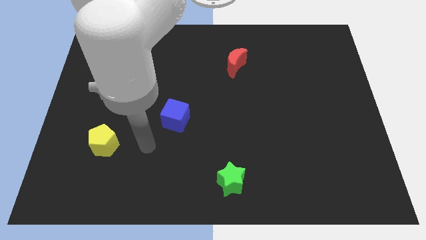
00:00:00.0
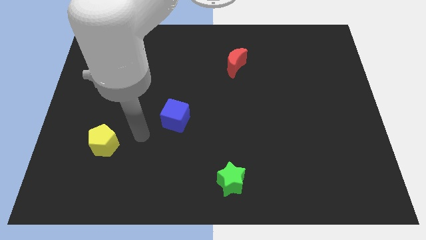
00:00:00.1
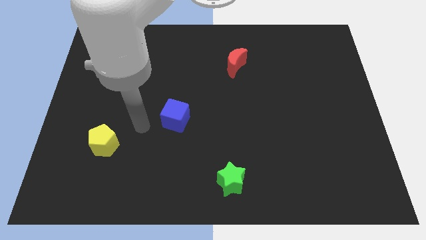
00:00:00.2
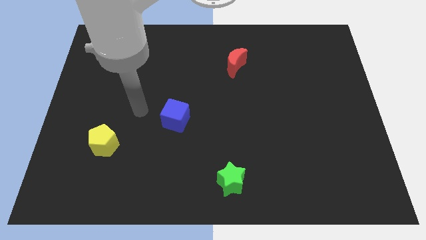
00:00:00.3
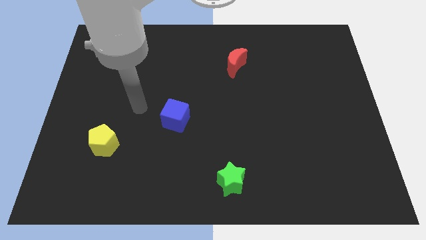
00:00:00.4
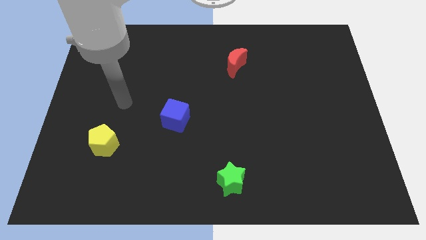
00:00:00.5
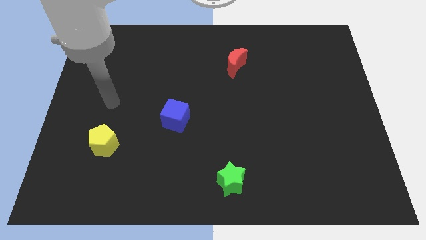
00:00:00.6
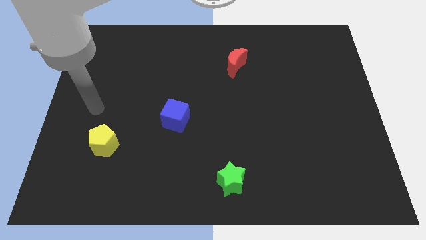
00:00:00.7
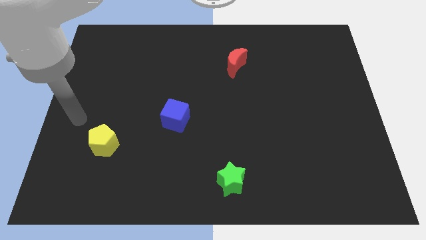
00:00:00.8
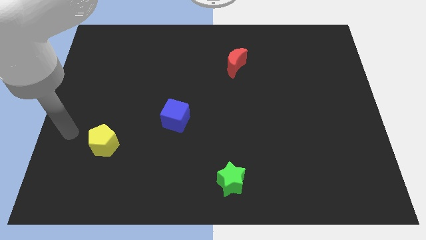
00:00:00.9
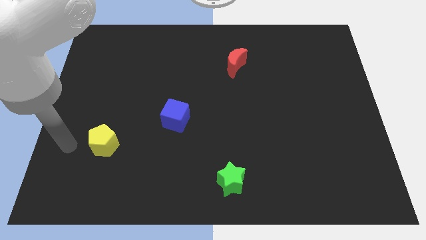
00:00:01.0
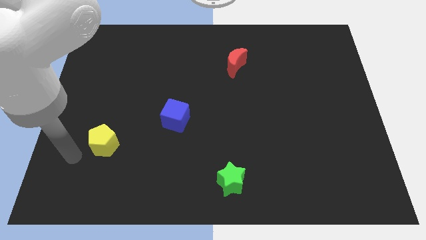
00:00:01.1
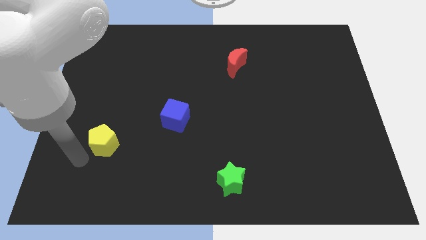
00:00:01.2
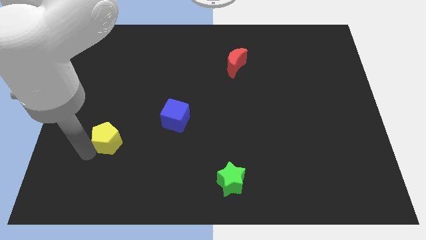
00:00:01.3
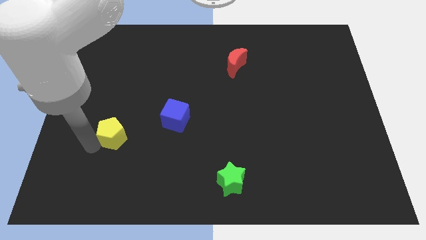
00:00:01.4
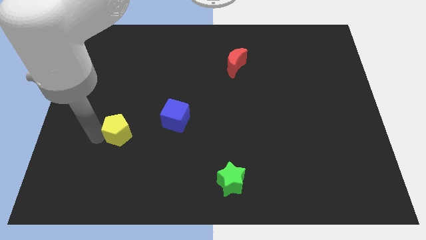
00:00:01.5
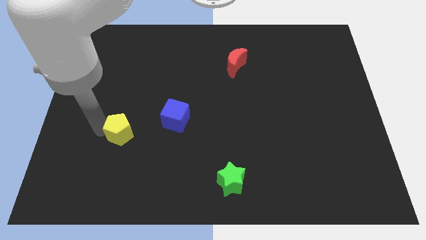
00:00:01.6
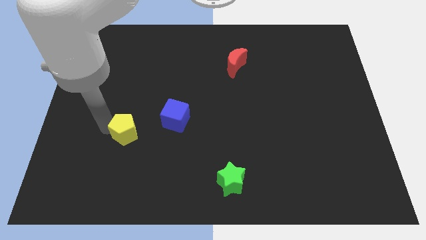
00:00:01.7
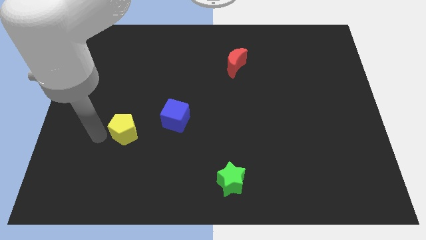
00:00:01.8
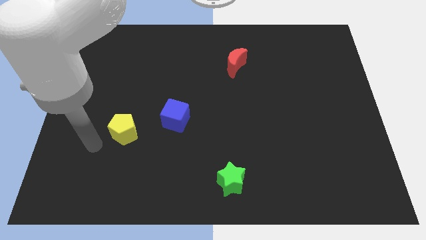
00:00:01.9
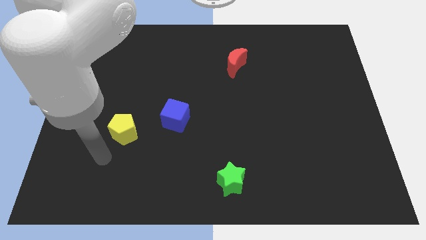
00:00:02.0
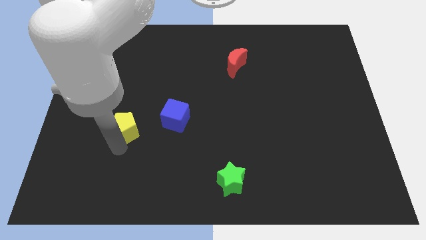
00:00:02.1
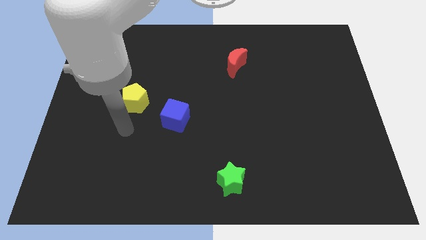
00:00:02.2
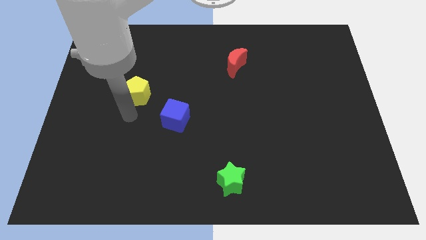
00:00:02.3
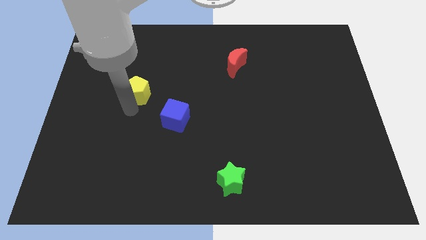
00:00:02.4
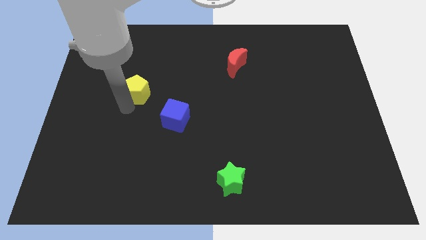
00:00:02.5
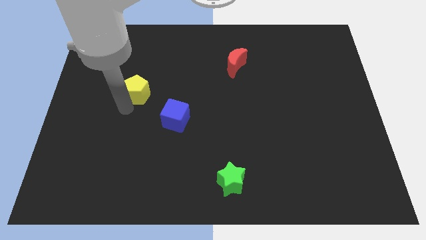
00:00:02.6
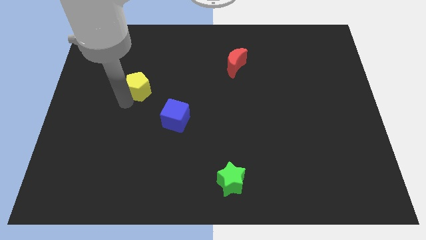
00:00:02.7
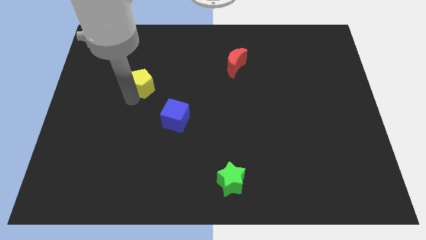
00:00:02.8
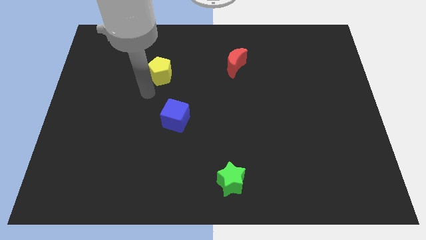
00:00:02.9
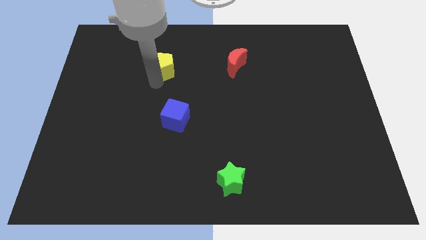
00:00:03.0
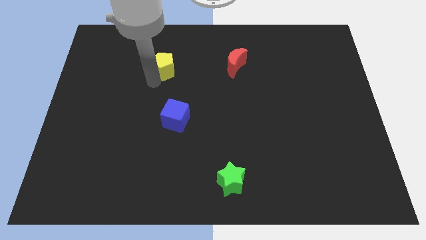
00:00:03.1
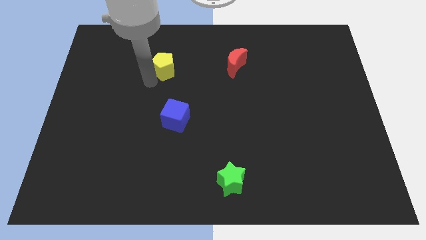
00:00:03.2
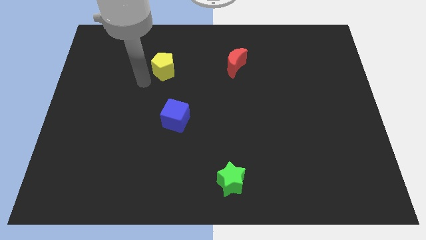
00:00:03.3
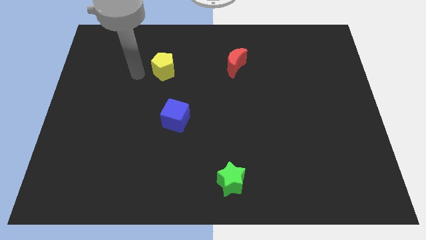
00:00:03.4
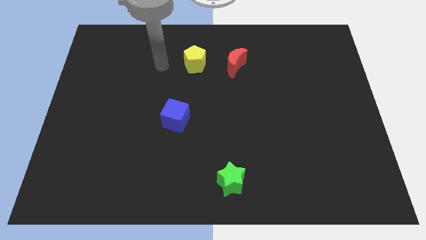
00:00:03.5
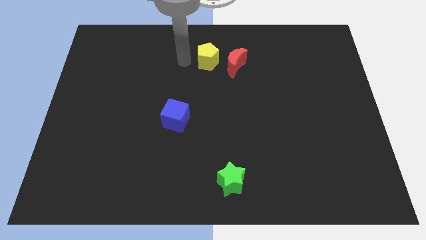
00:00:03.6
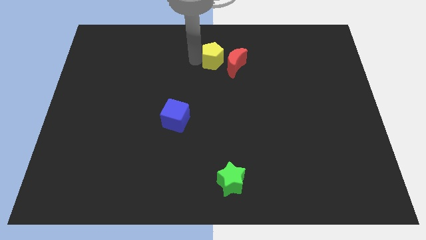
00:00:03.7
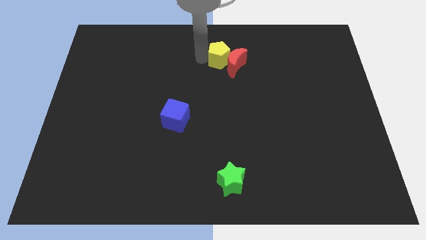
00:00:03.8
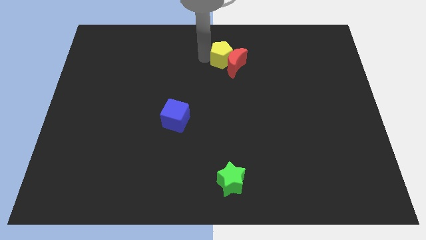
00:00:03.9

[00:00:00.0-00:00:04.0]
slide the yellow pentagon towards the red block

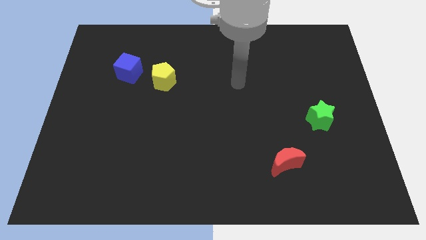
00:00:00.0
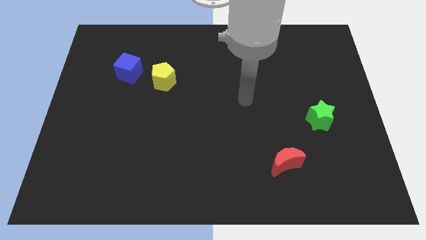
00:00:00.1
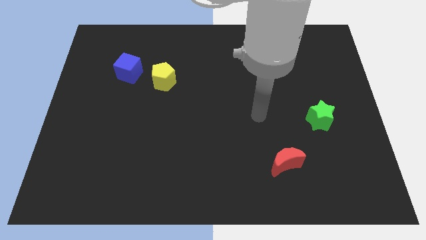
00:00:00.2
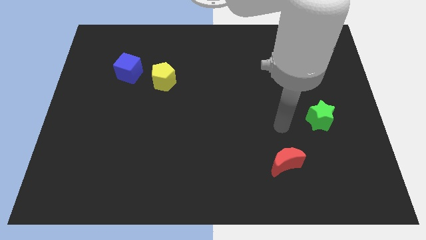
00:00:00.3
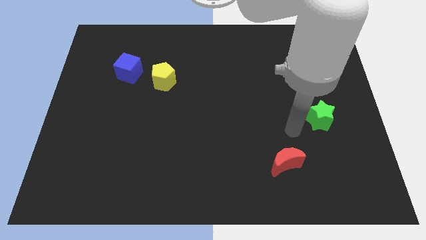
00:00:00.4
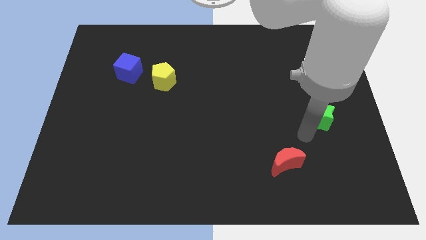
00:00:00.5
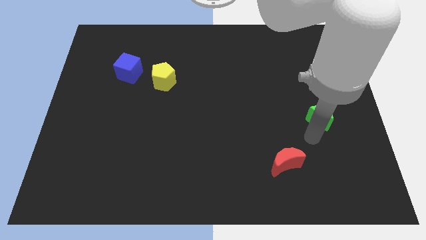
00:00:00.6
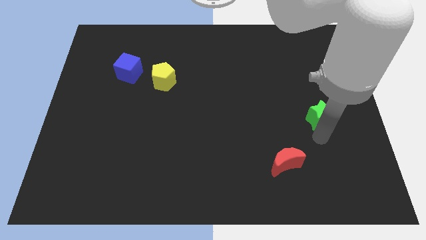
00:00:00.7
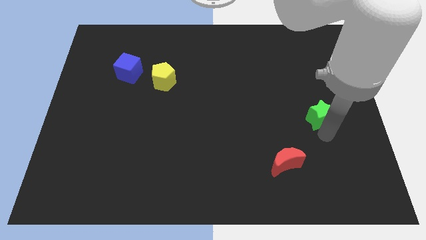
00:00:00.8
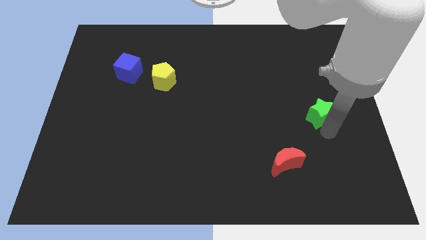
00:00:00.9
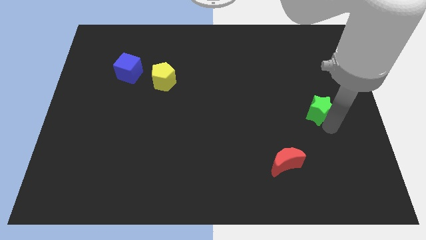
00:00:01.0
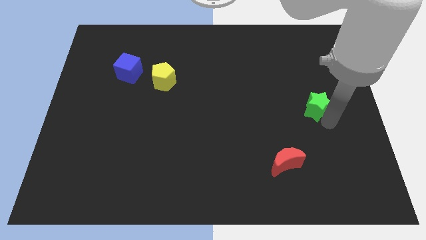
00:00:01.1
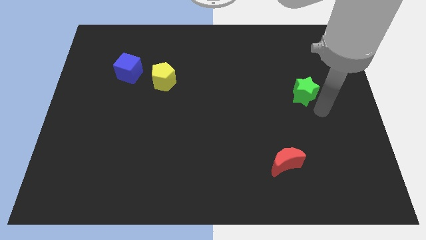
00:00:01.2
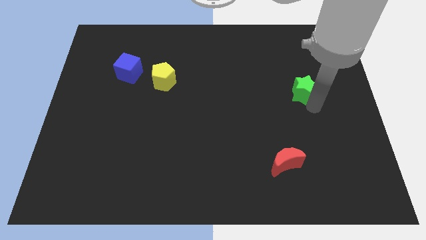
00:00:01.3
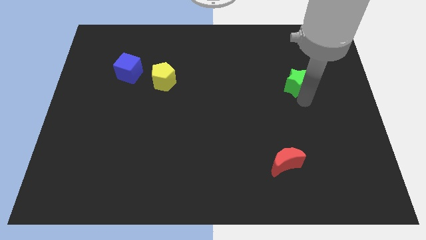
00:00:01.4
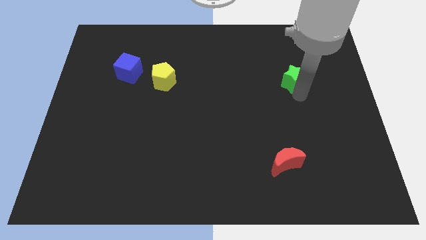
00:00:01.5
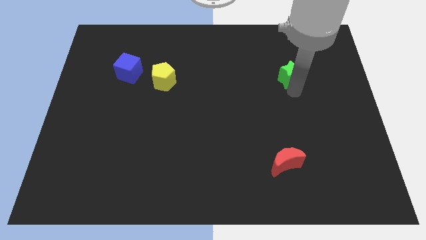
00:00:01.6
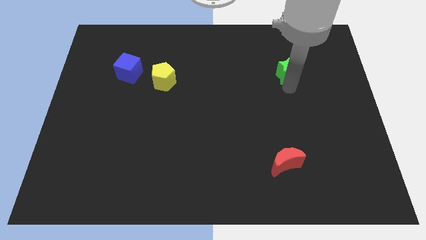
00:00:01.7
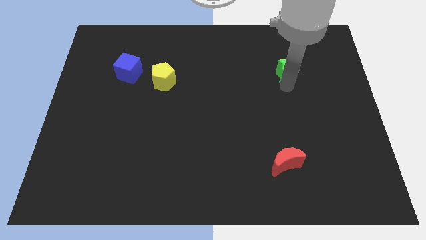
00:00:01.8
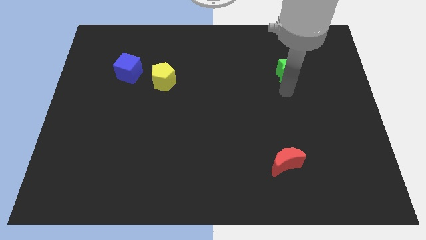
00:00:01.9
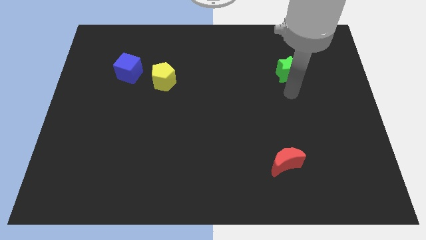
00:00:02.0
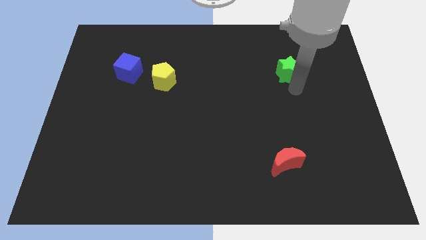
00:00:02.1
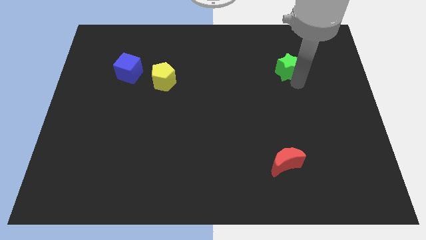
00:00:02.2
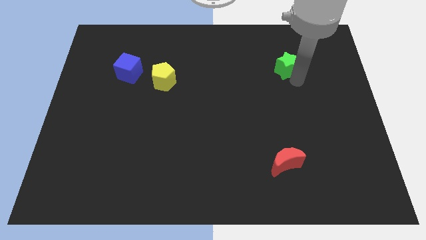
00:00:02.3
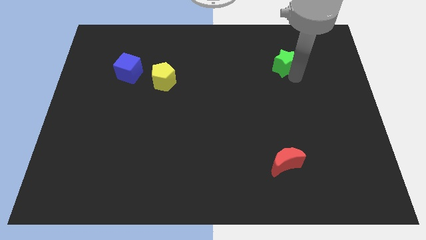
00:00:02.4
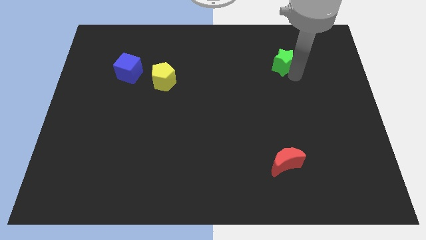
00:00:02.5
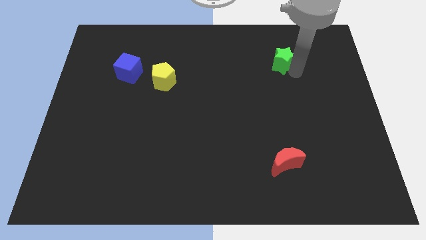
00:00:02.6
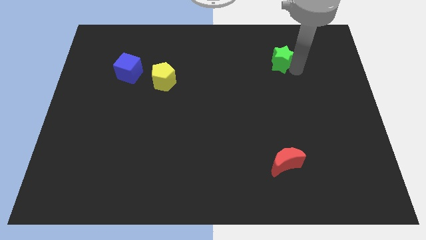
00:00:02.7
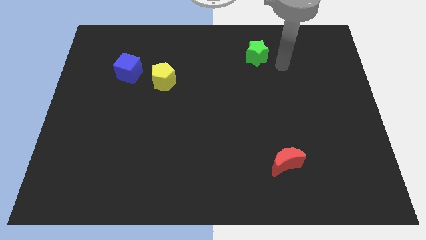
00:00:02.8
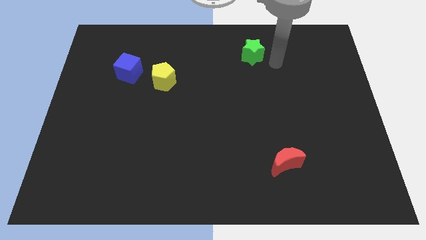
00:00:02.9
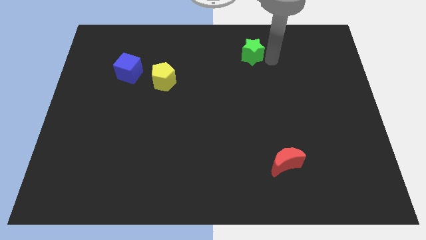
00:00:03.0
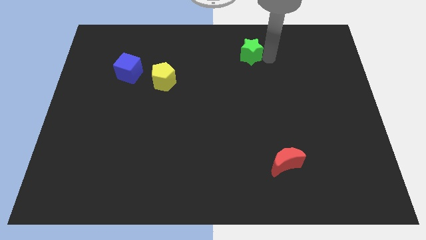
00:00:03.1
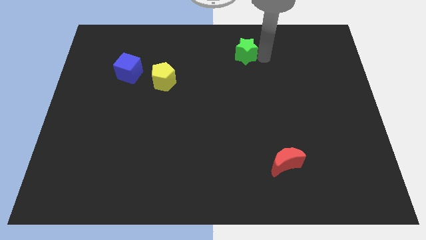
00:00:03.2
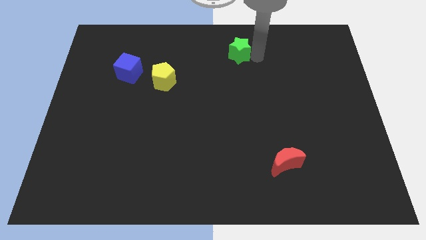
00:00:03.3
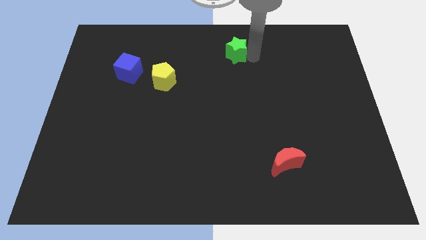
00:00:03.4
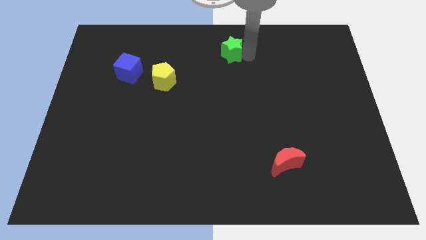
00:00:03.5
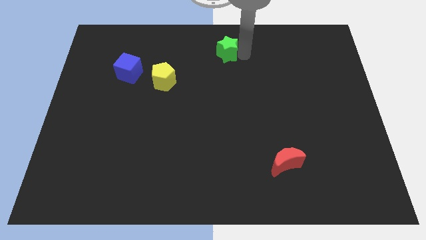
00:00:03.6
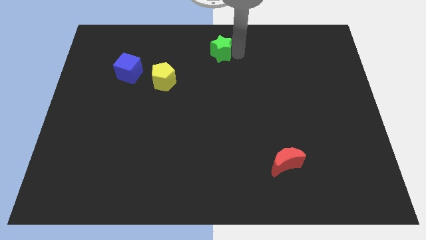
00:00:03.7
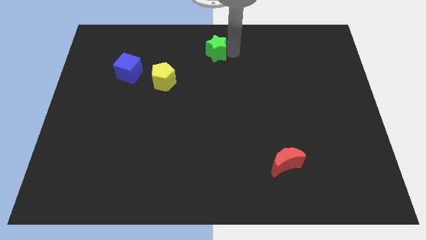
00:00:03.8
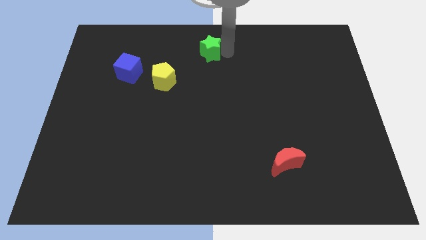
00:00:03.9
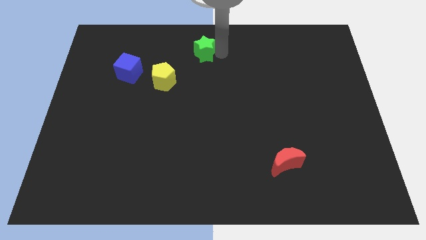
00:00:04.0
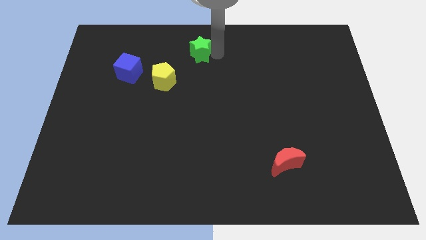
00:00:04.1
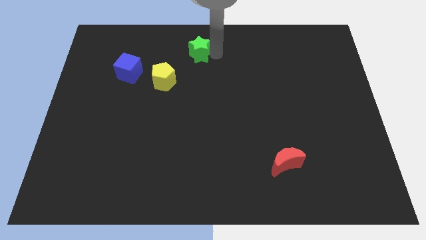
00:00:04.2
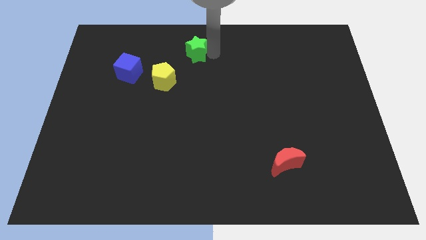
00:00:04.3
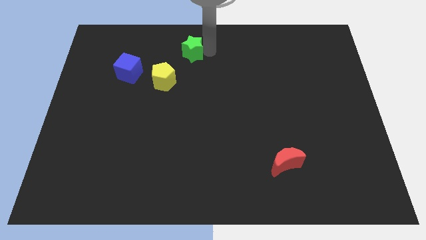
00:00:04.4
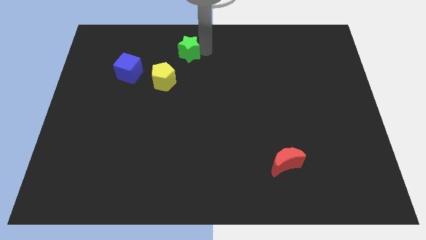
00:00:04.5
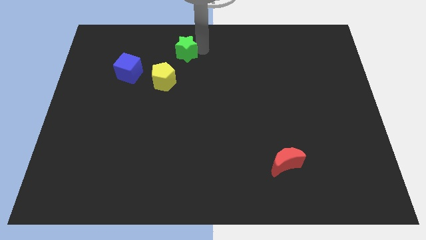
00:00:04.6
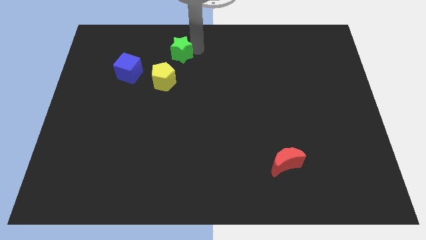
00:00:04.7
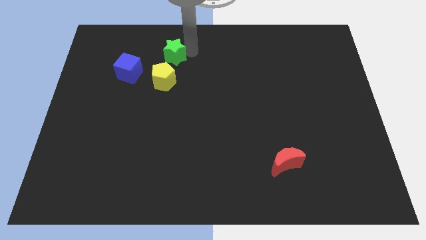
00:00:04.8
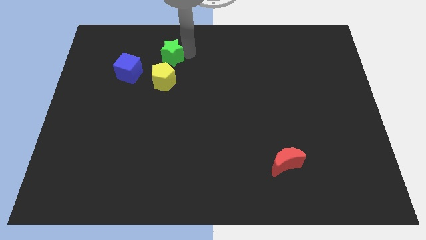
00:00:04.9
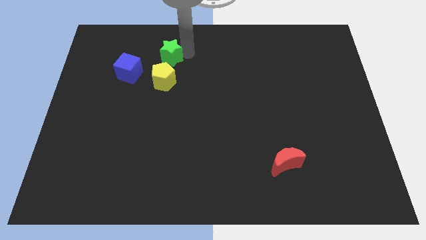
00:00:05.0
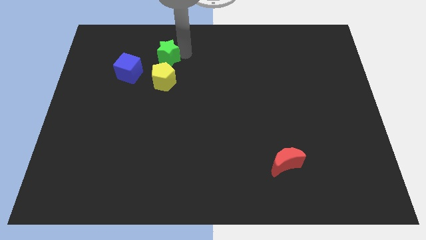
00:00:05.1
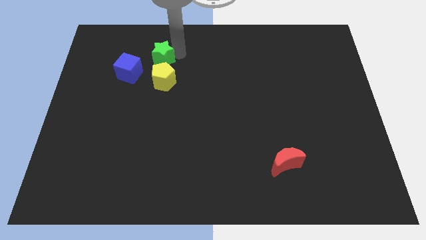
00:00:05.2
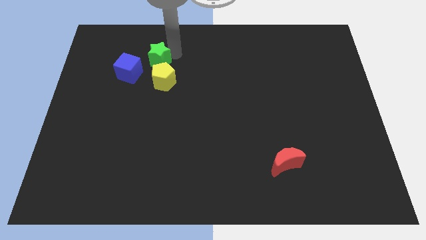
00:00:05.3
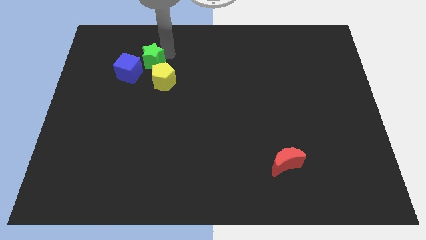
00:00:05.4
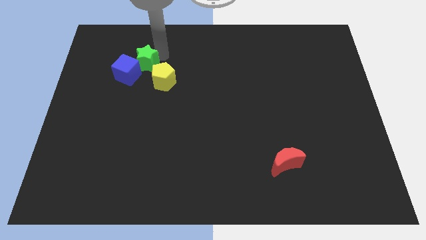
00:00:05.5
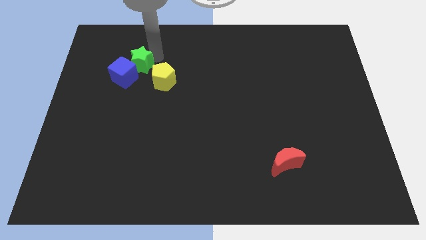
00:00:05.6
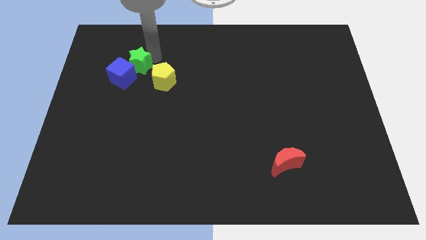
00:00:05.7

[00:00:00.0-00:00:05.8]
move the green star towards the blue block
